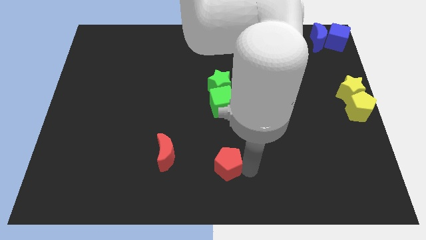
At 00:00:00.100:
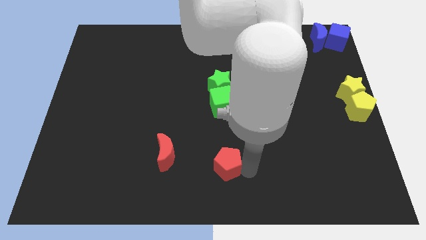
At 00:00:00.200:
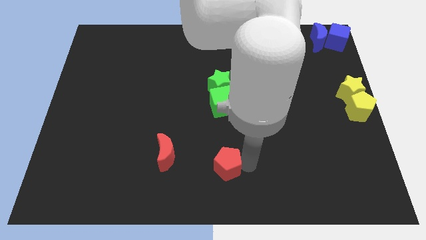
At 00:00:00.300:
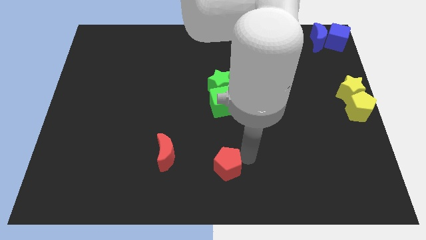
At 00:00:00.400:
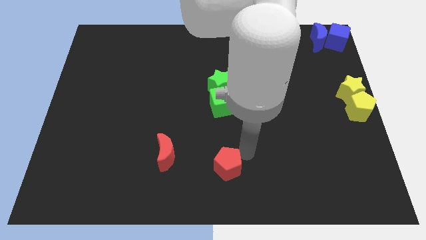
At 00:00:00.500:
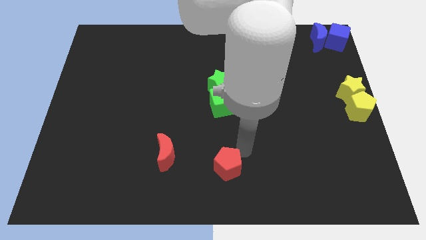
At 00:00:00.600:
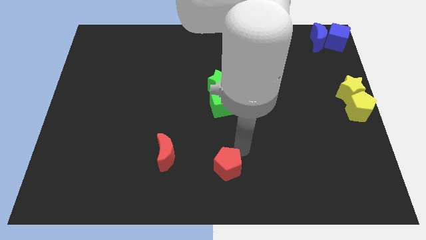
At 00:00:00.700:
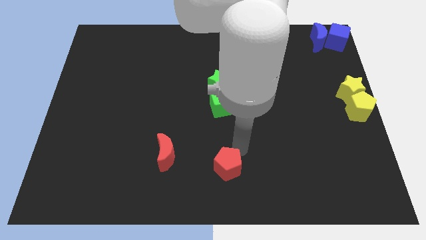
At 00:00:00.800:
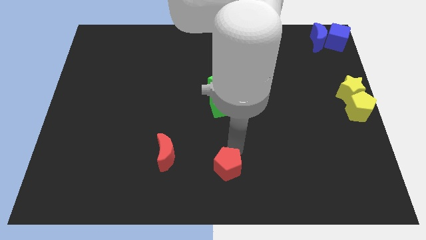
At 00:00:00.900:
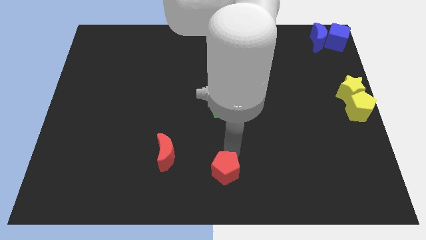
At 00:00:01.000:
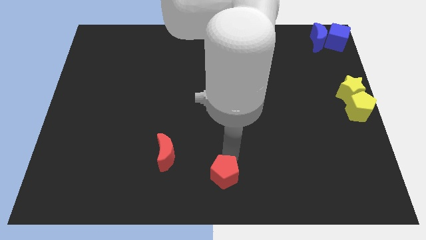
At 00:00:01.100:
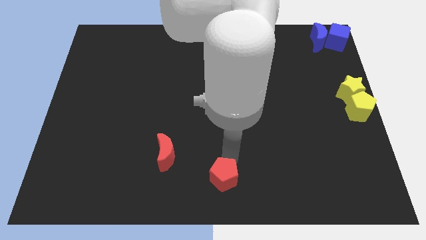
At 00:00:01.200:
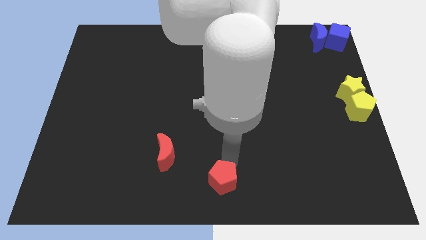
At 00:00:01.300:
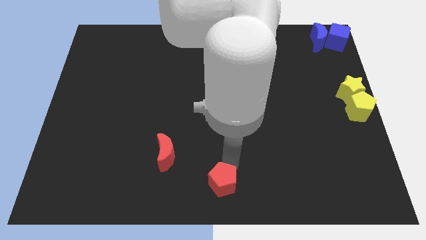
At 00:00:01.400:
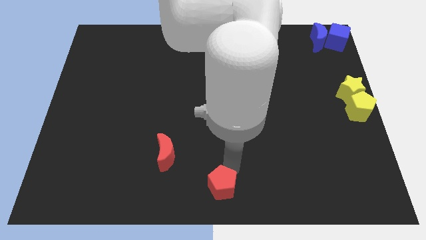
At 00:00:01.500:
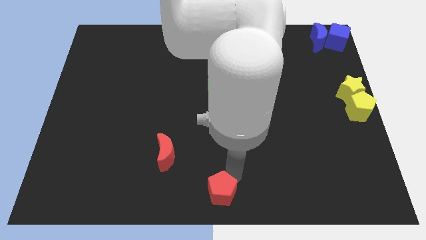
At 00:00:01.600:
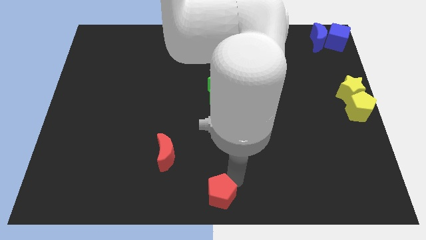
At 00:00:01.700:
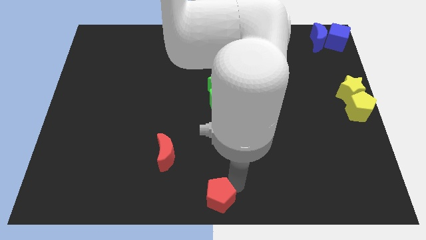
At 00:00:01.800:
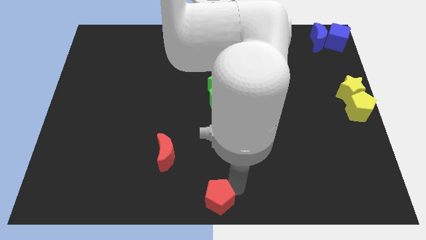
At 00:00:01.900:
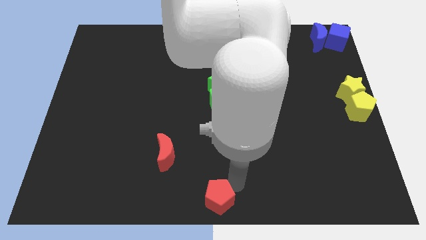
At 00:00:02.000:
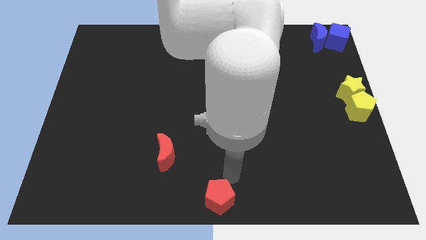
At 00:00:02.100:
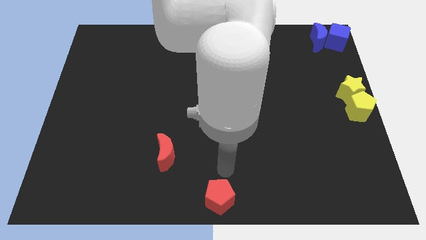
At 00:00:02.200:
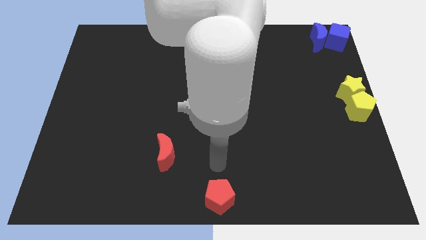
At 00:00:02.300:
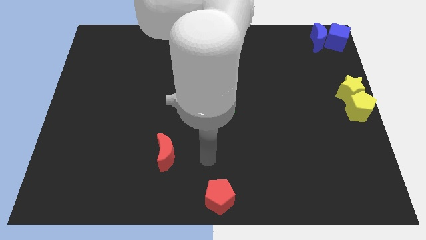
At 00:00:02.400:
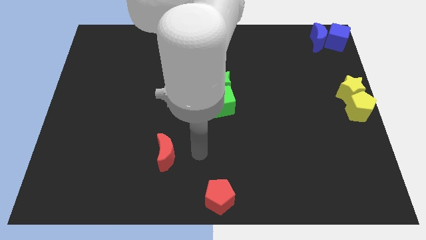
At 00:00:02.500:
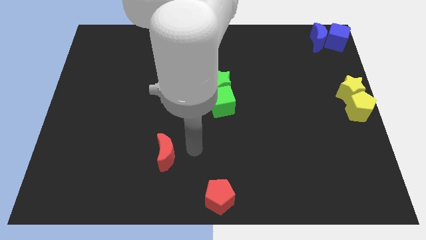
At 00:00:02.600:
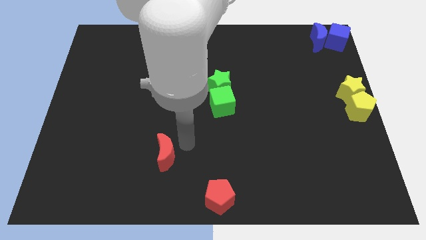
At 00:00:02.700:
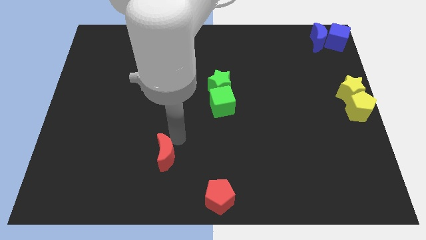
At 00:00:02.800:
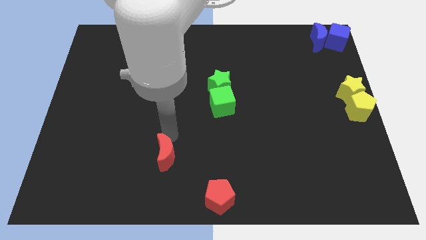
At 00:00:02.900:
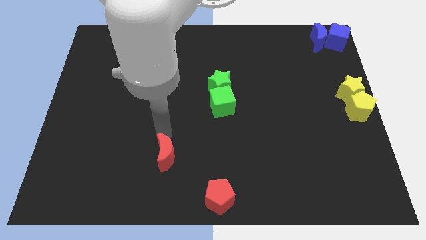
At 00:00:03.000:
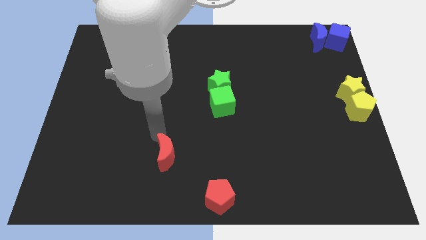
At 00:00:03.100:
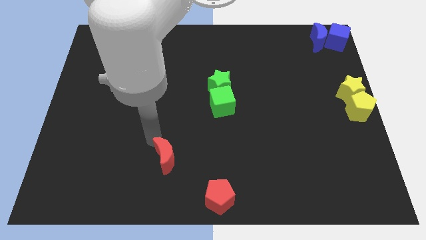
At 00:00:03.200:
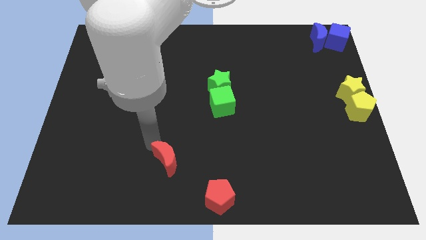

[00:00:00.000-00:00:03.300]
place the red pentagon to the bottom center of the board

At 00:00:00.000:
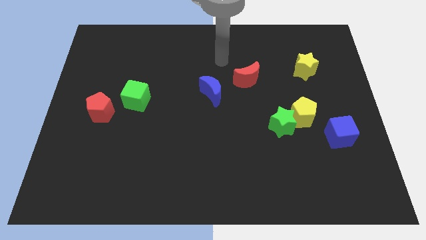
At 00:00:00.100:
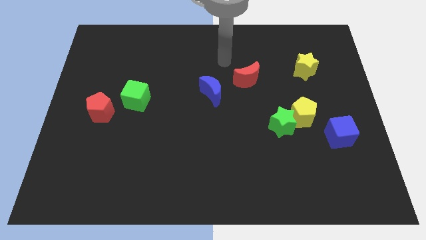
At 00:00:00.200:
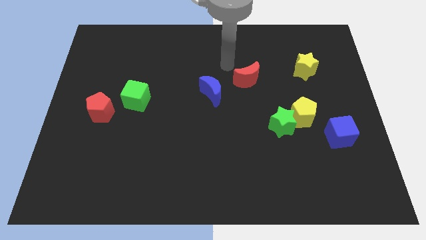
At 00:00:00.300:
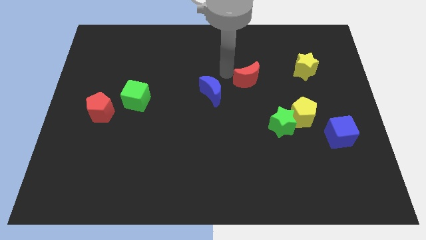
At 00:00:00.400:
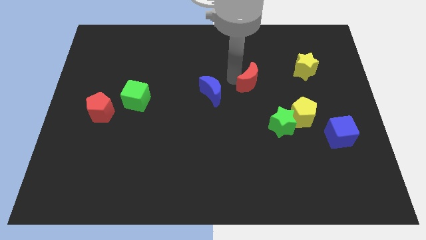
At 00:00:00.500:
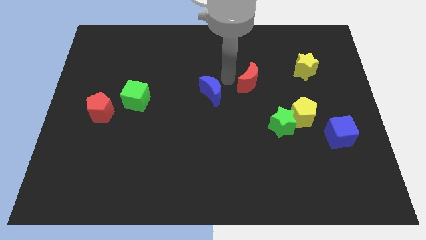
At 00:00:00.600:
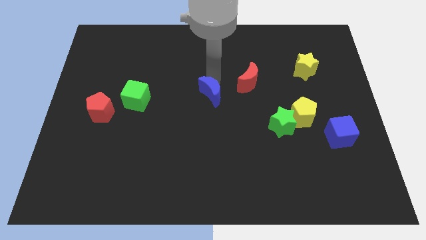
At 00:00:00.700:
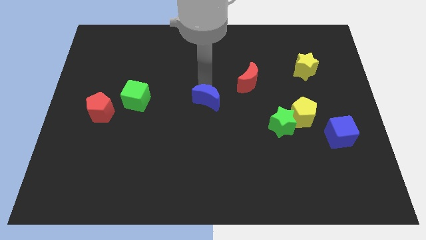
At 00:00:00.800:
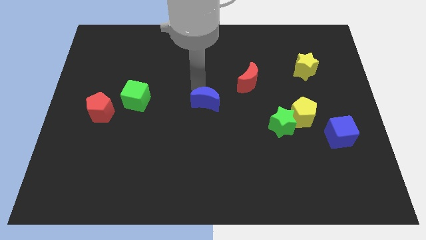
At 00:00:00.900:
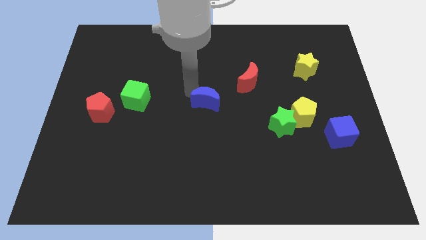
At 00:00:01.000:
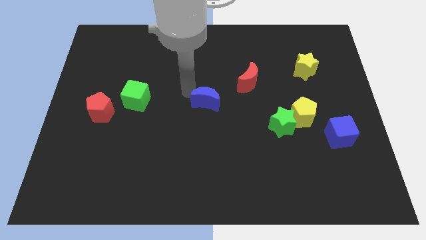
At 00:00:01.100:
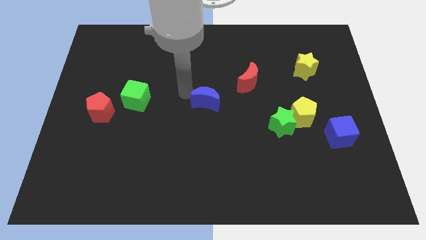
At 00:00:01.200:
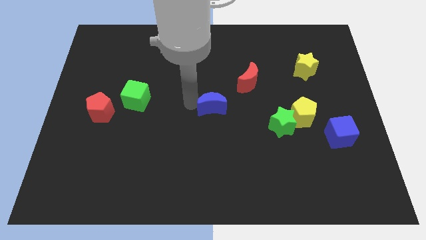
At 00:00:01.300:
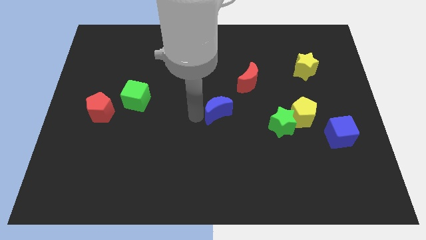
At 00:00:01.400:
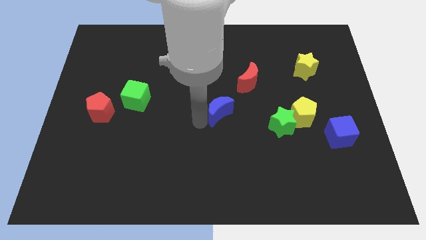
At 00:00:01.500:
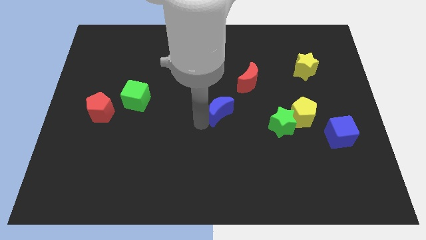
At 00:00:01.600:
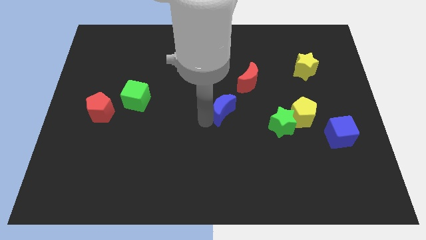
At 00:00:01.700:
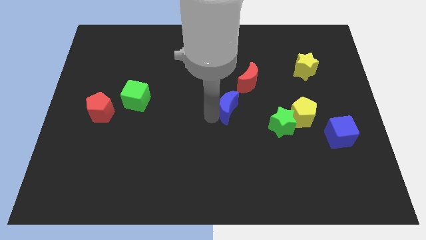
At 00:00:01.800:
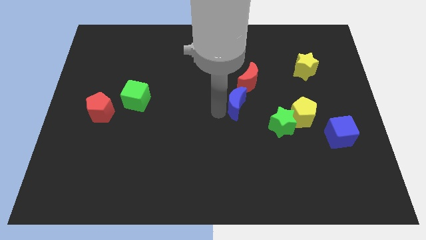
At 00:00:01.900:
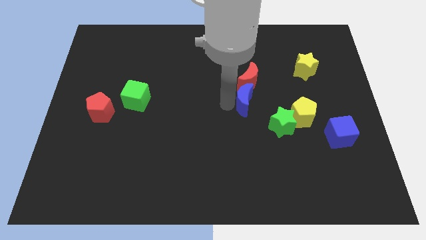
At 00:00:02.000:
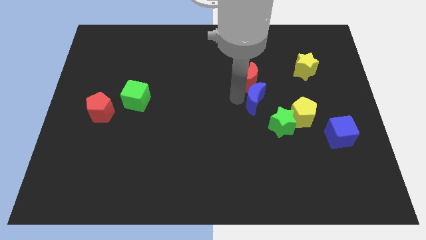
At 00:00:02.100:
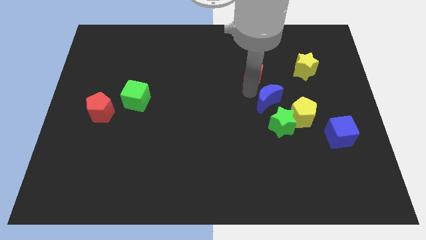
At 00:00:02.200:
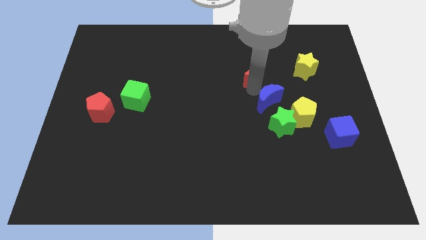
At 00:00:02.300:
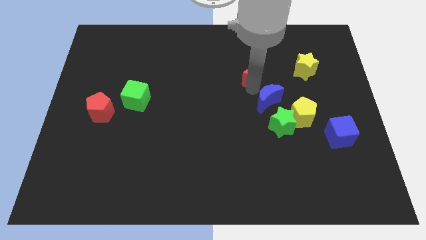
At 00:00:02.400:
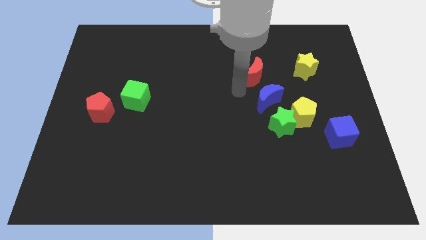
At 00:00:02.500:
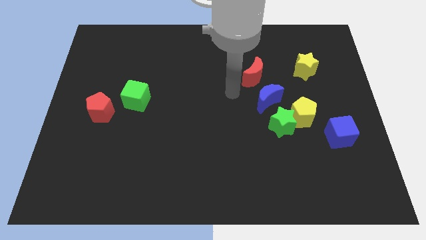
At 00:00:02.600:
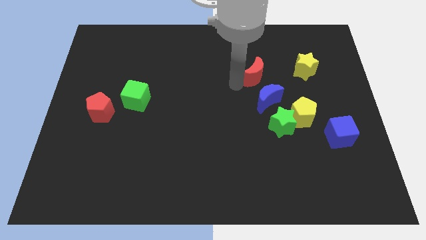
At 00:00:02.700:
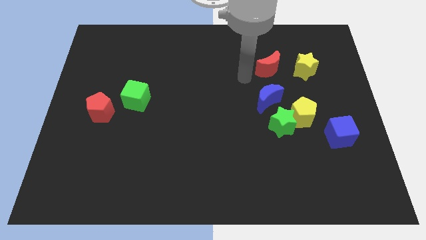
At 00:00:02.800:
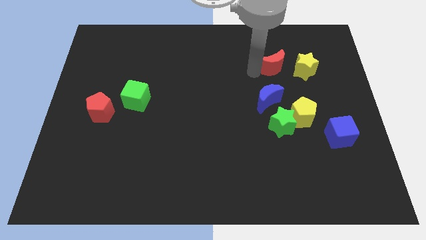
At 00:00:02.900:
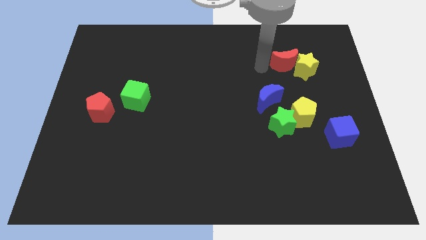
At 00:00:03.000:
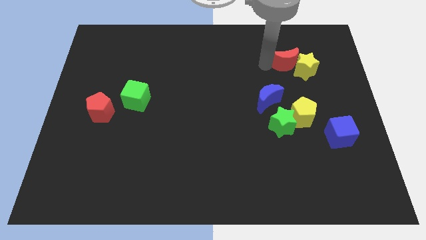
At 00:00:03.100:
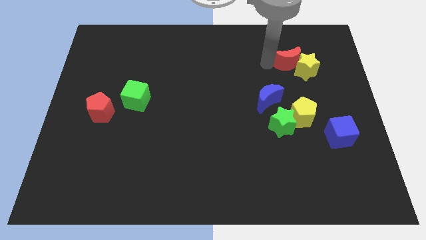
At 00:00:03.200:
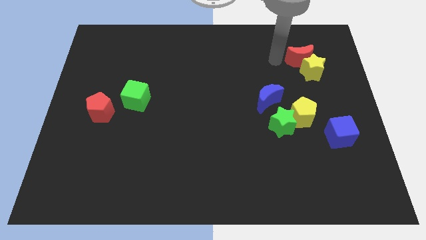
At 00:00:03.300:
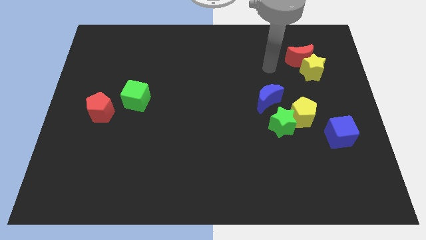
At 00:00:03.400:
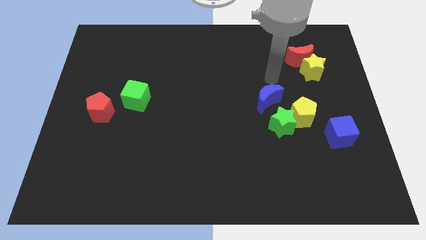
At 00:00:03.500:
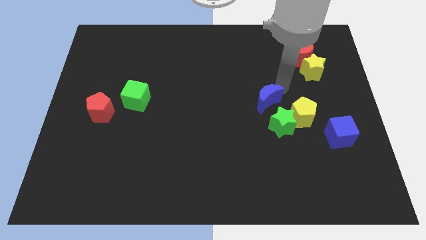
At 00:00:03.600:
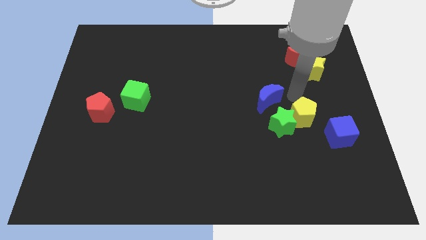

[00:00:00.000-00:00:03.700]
tap the red moon

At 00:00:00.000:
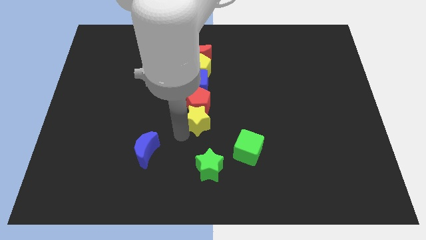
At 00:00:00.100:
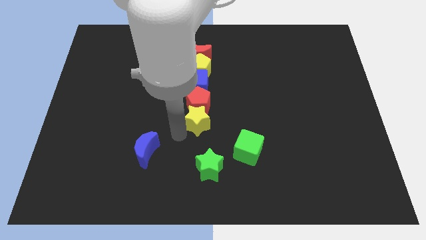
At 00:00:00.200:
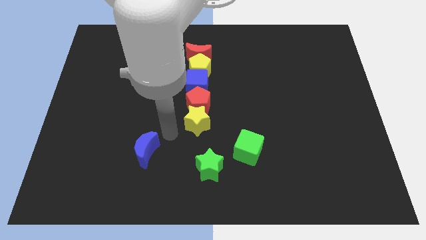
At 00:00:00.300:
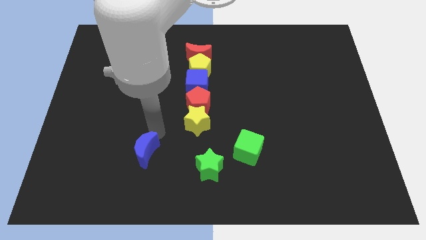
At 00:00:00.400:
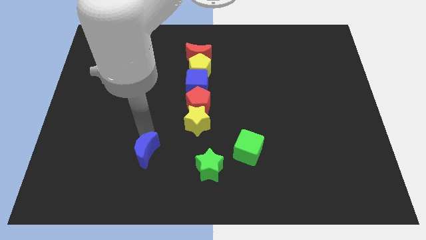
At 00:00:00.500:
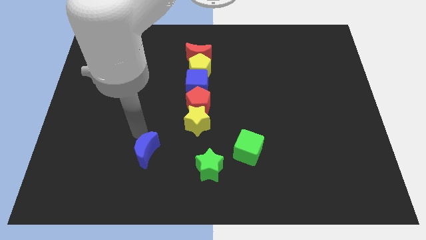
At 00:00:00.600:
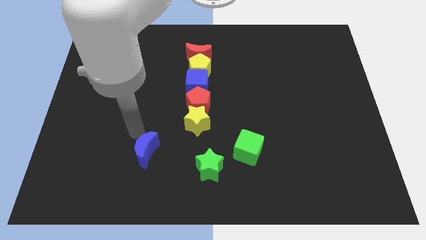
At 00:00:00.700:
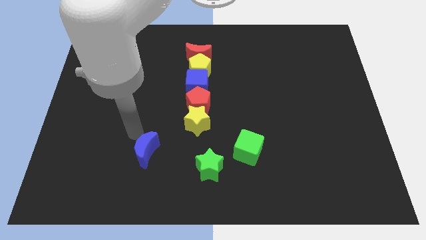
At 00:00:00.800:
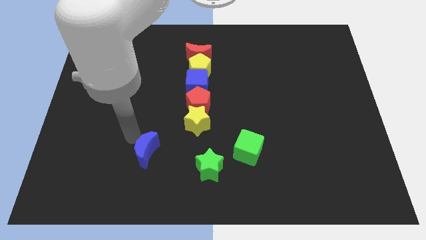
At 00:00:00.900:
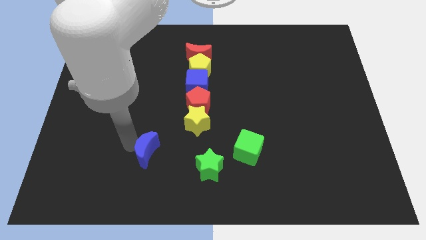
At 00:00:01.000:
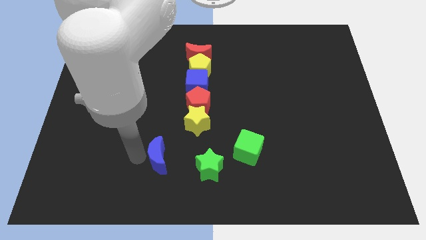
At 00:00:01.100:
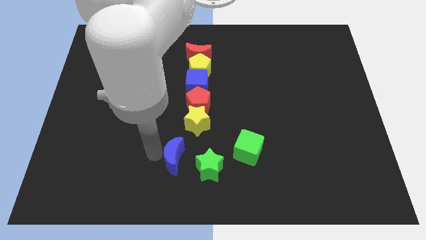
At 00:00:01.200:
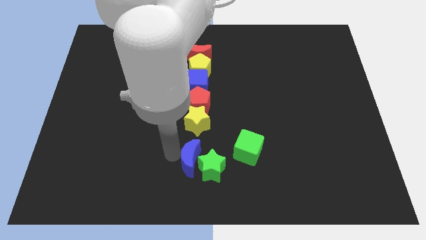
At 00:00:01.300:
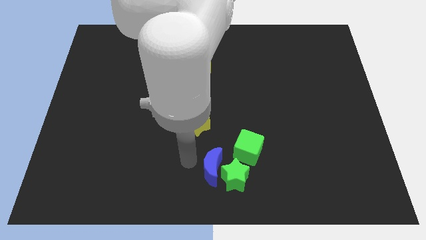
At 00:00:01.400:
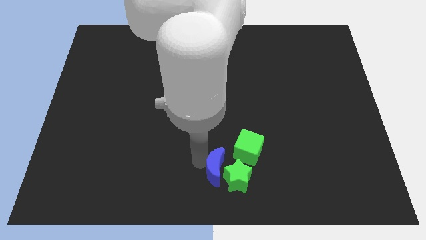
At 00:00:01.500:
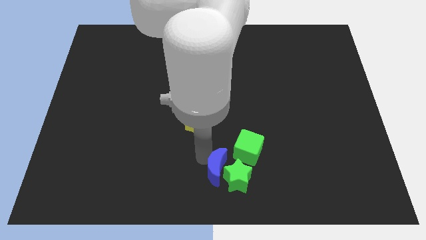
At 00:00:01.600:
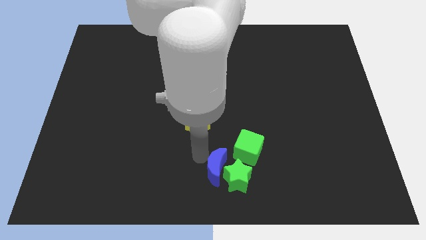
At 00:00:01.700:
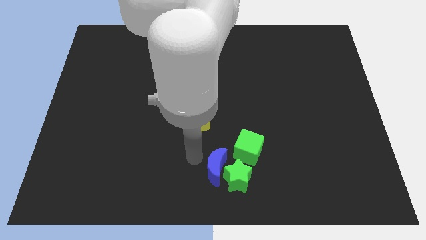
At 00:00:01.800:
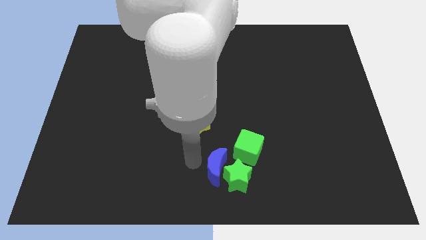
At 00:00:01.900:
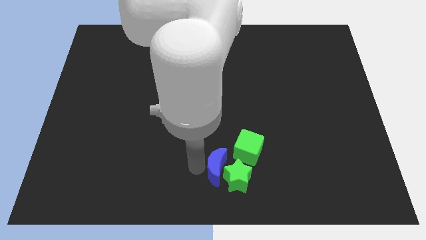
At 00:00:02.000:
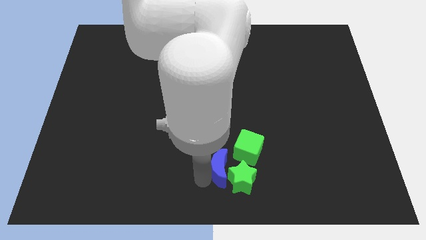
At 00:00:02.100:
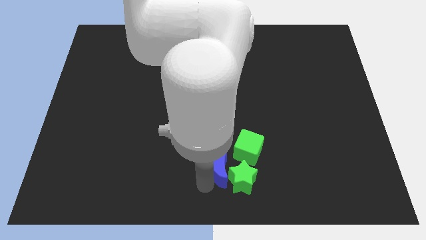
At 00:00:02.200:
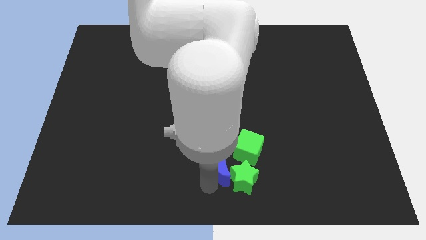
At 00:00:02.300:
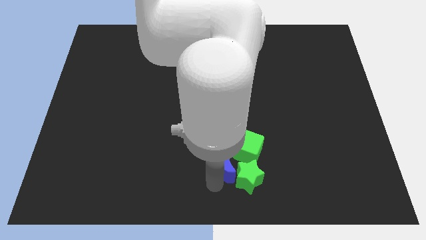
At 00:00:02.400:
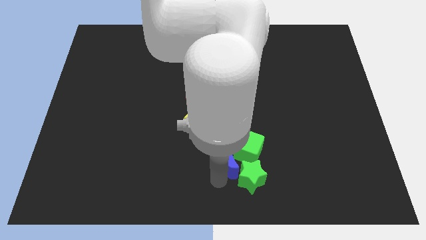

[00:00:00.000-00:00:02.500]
push green star with blue moon towards the bottom of the board
